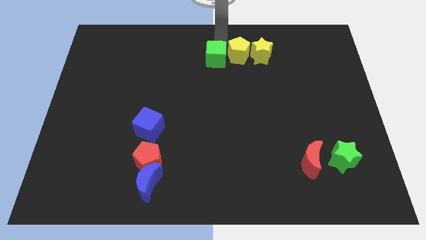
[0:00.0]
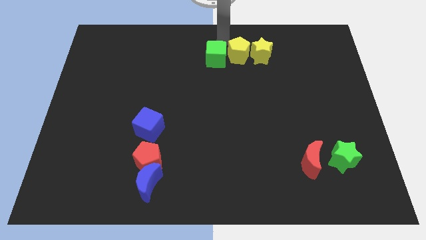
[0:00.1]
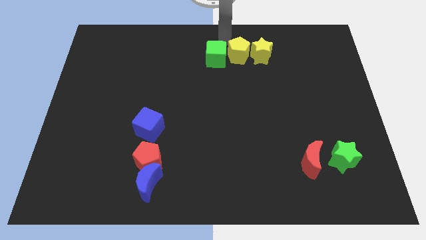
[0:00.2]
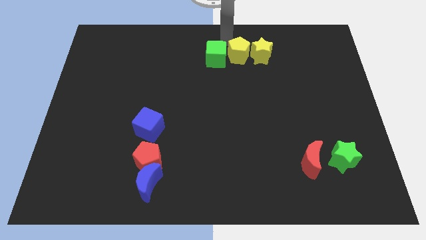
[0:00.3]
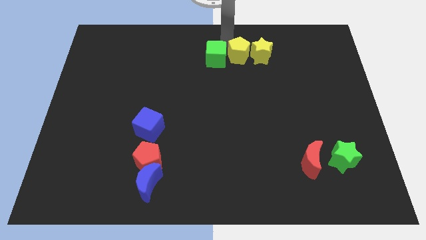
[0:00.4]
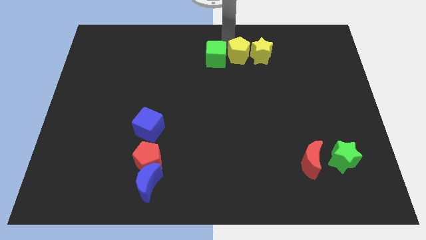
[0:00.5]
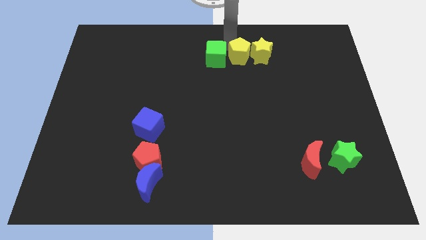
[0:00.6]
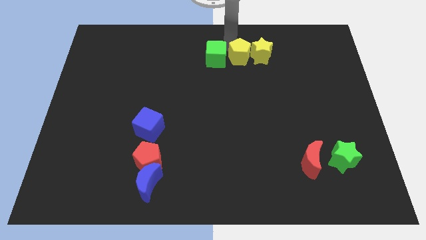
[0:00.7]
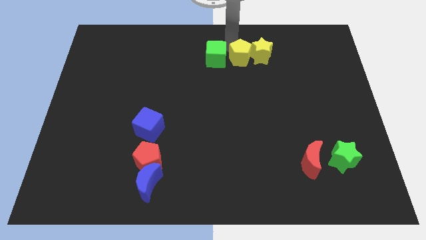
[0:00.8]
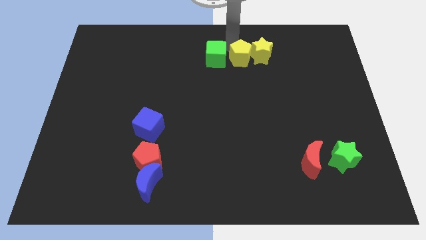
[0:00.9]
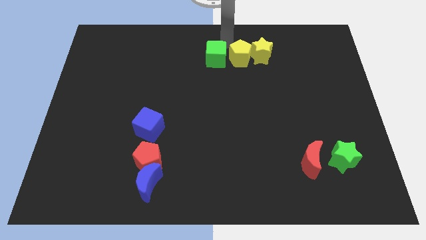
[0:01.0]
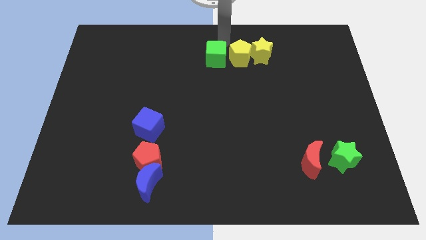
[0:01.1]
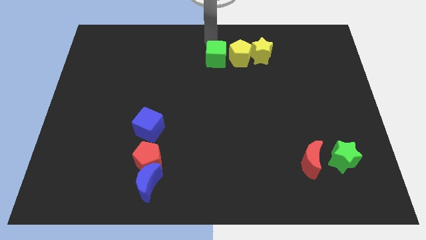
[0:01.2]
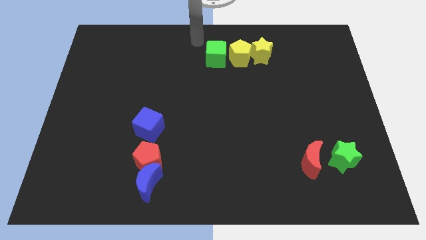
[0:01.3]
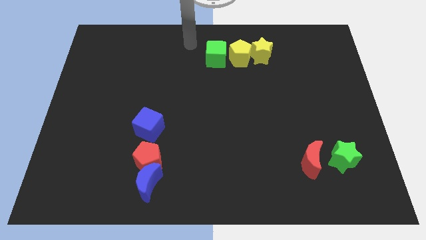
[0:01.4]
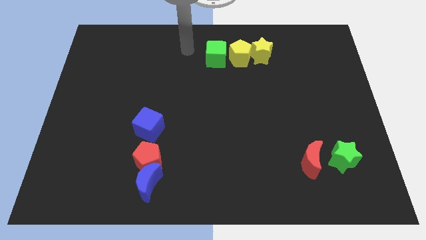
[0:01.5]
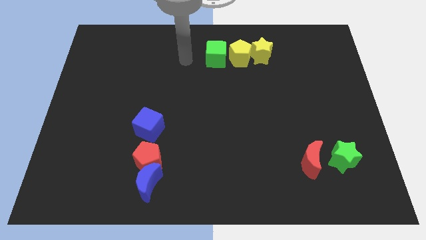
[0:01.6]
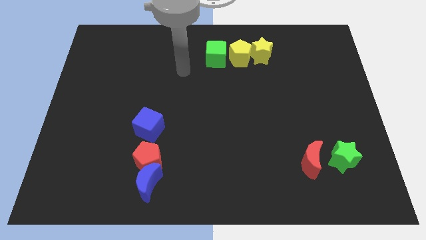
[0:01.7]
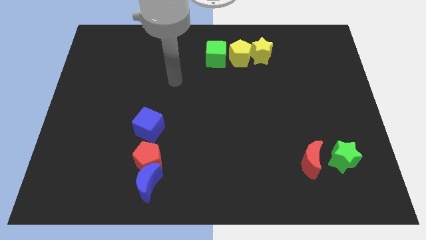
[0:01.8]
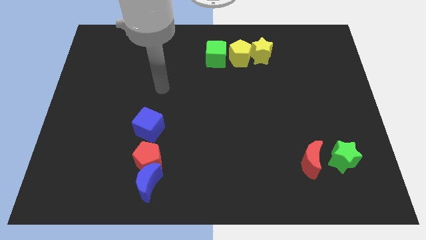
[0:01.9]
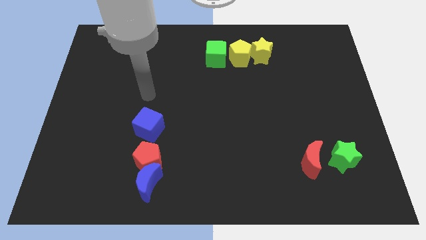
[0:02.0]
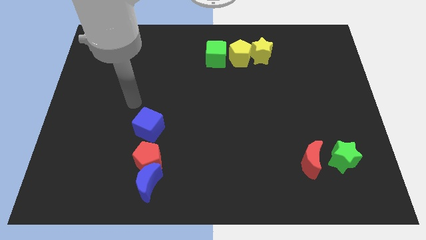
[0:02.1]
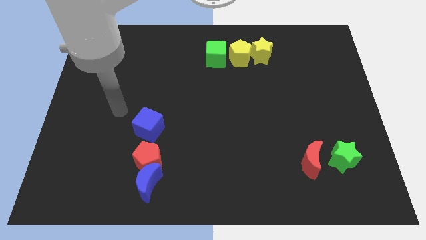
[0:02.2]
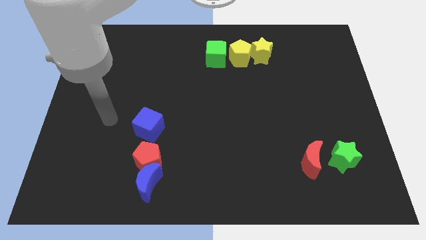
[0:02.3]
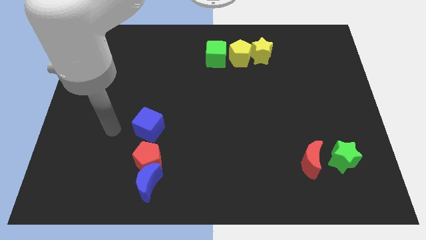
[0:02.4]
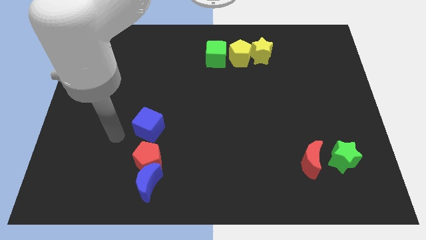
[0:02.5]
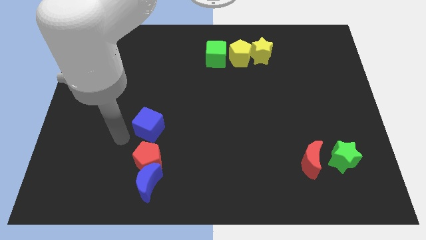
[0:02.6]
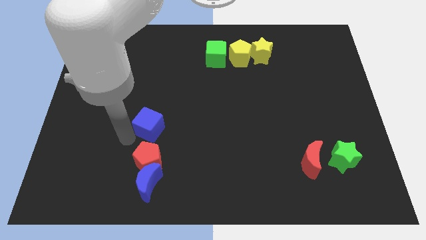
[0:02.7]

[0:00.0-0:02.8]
move arm to the blue cube

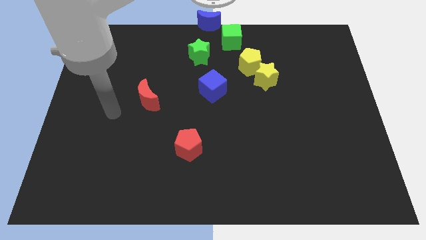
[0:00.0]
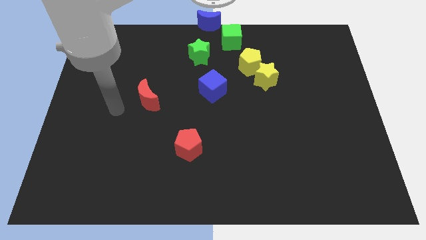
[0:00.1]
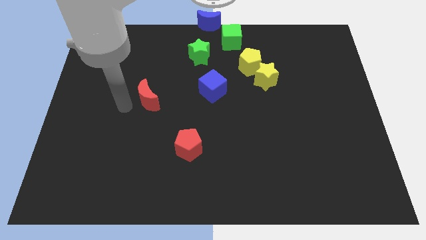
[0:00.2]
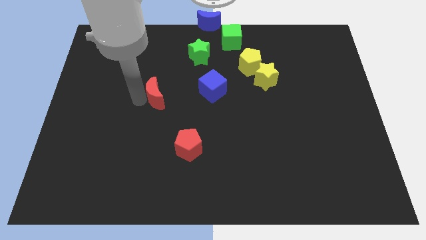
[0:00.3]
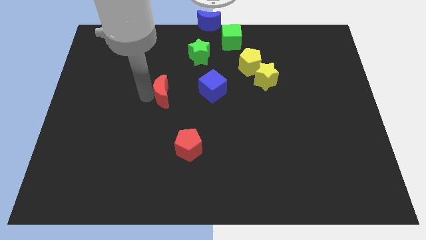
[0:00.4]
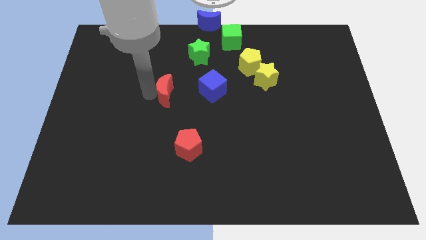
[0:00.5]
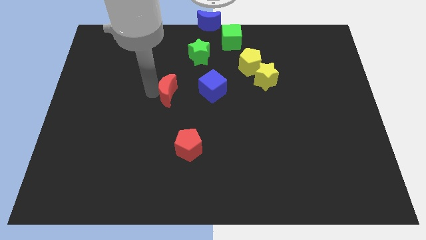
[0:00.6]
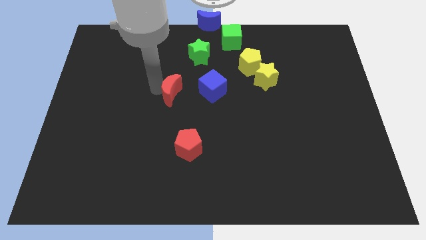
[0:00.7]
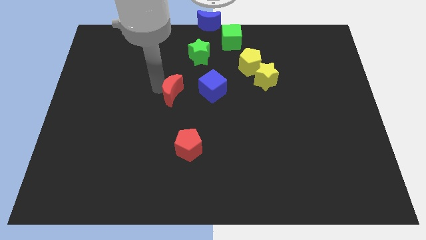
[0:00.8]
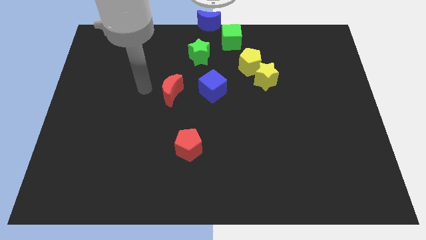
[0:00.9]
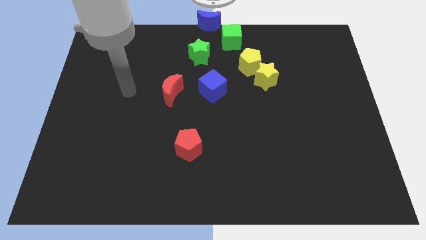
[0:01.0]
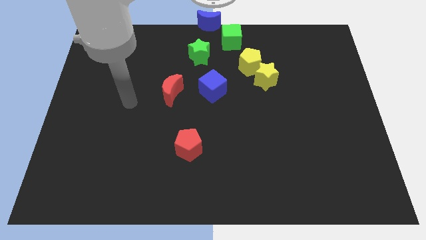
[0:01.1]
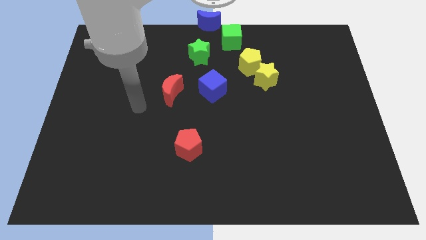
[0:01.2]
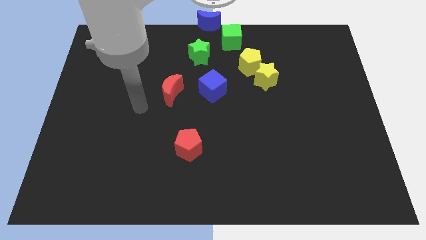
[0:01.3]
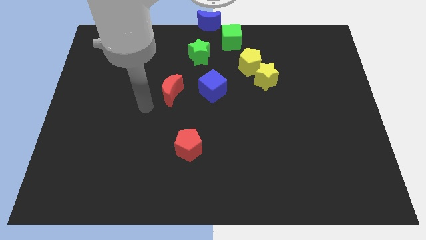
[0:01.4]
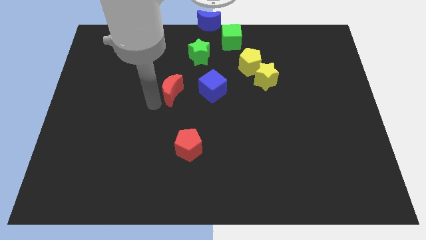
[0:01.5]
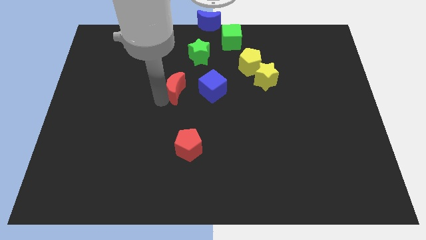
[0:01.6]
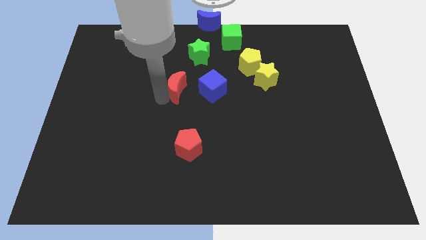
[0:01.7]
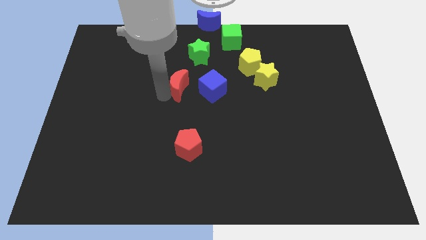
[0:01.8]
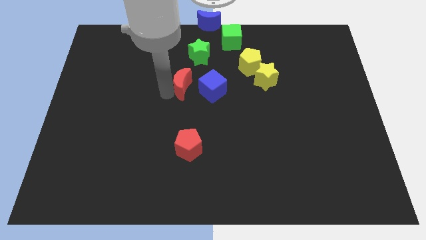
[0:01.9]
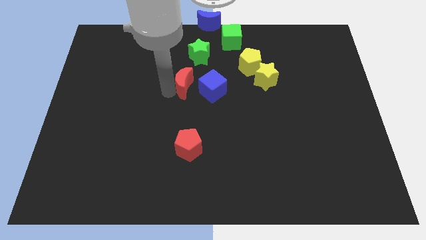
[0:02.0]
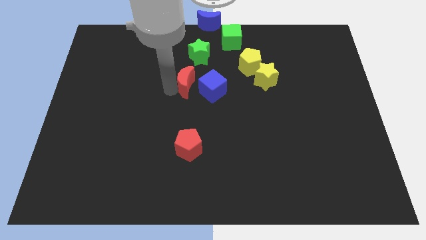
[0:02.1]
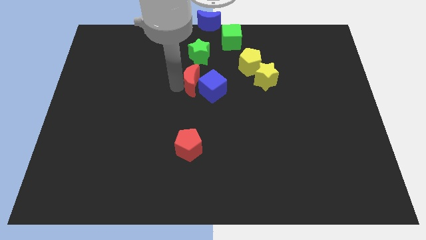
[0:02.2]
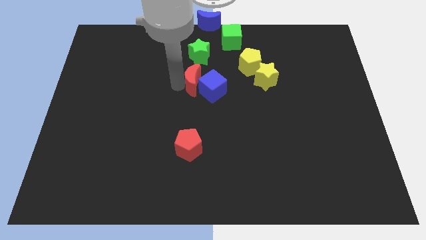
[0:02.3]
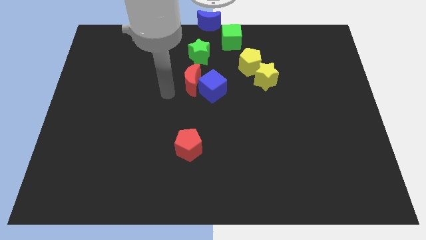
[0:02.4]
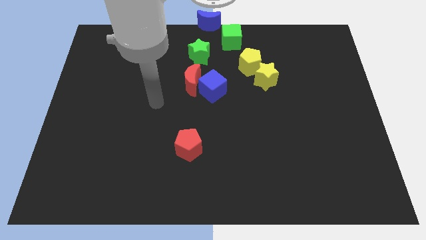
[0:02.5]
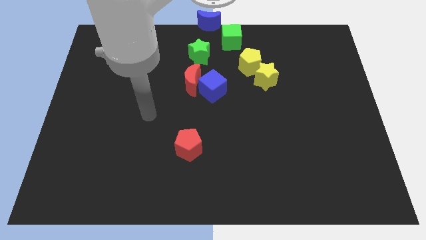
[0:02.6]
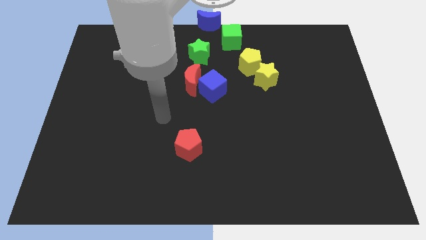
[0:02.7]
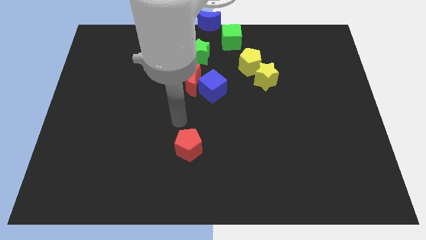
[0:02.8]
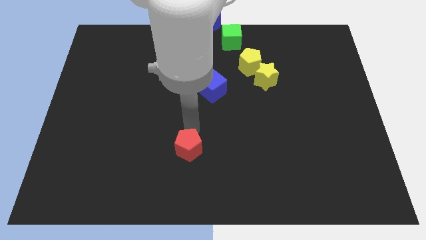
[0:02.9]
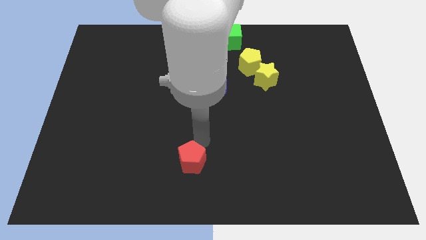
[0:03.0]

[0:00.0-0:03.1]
push the red moon closely to the blue cube from left

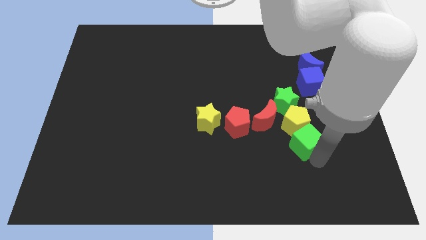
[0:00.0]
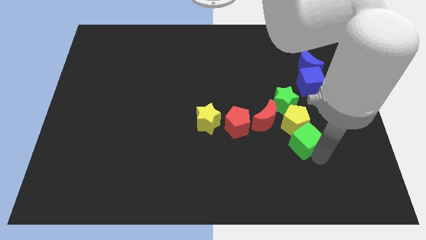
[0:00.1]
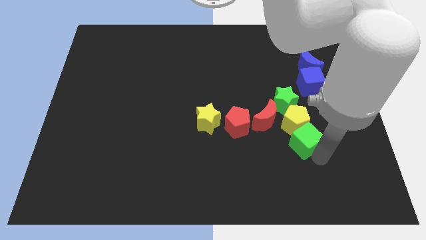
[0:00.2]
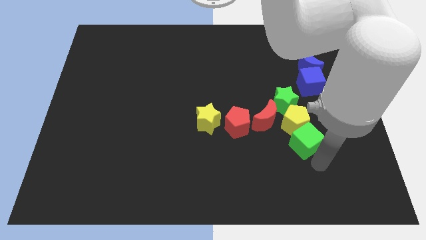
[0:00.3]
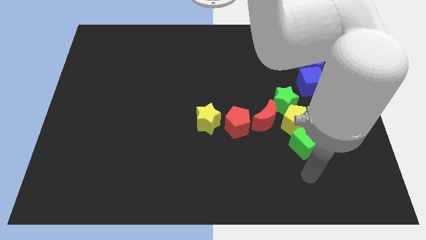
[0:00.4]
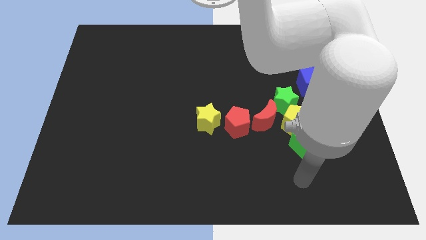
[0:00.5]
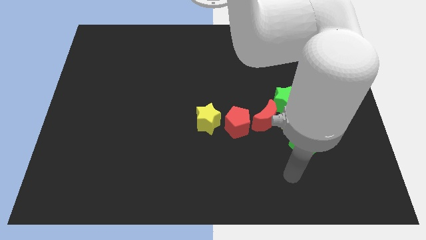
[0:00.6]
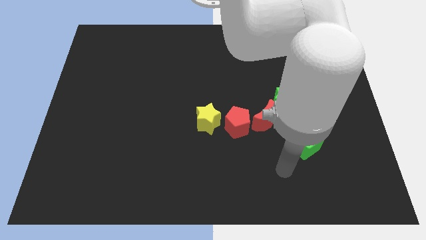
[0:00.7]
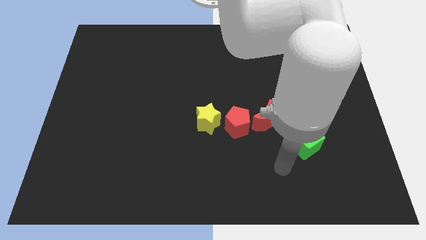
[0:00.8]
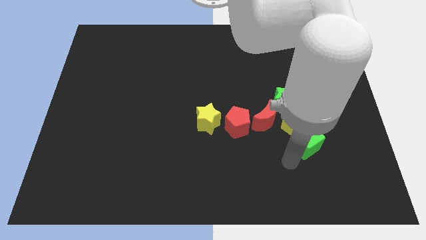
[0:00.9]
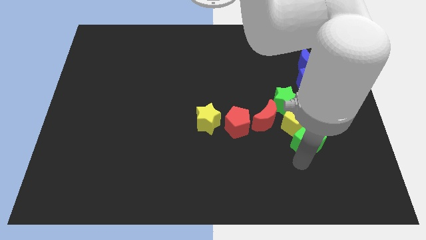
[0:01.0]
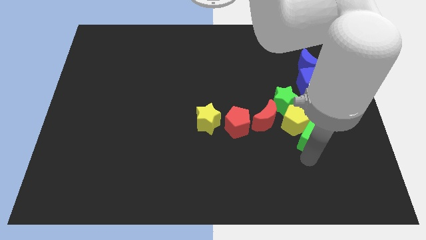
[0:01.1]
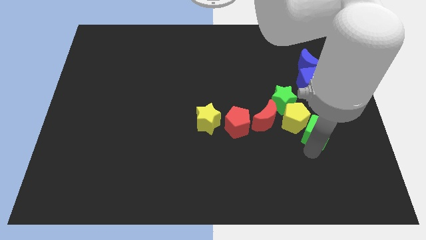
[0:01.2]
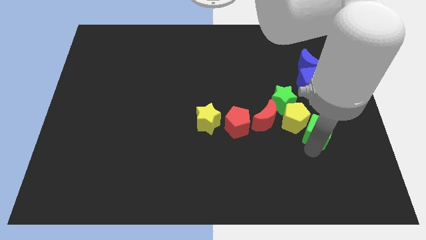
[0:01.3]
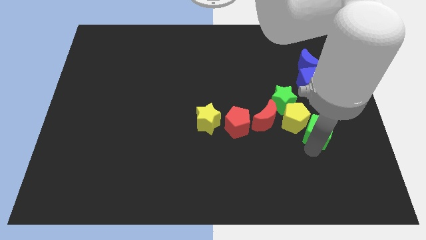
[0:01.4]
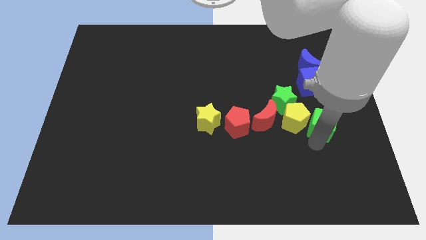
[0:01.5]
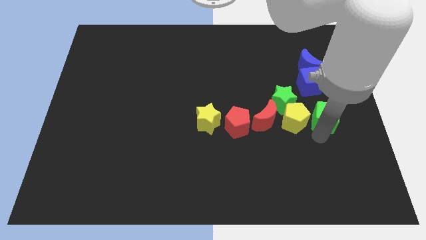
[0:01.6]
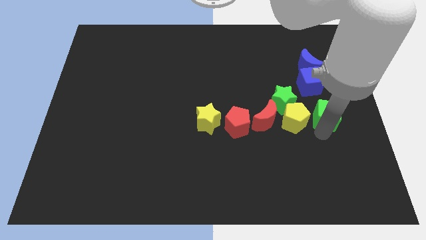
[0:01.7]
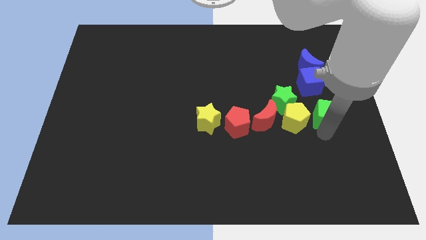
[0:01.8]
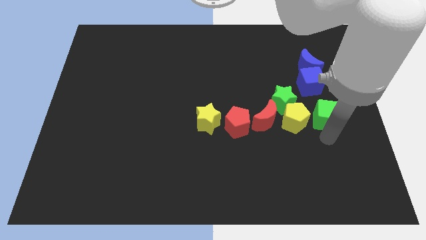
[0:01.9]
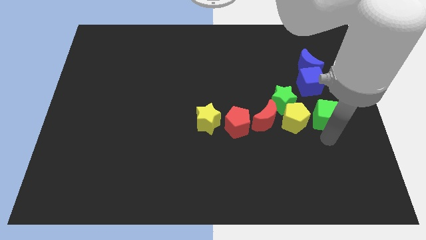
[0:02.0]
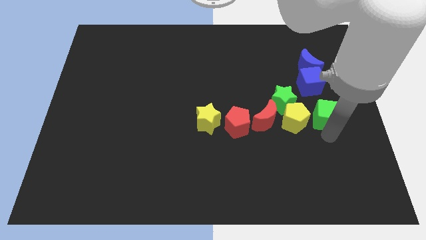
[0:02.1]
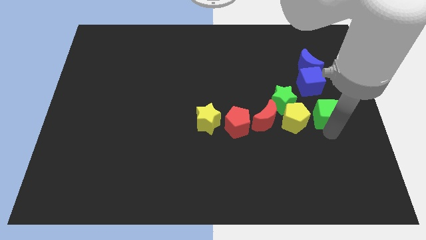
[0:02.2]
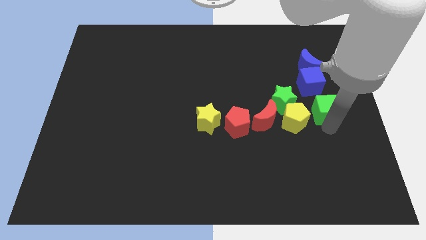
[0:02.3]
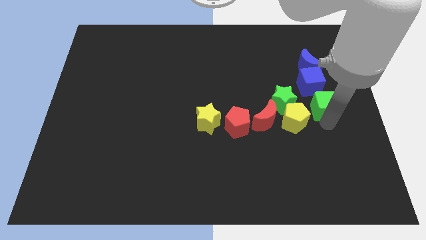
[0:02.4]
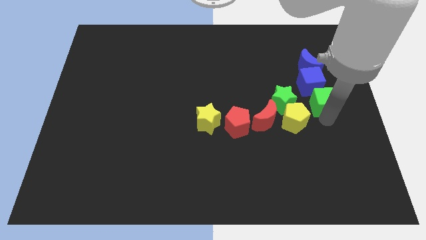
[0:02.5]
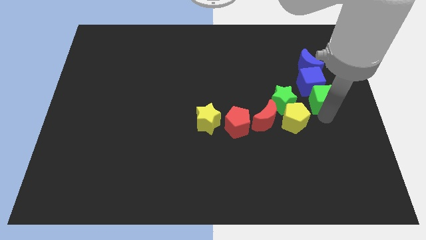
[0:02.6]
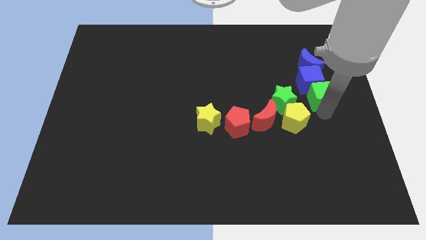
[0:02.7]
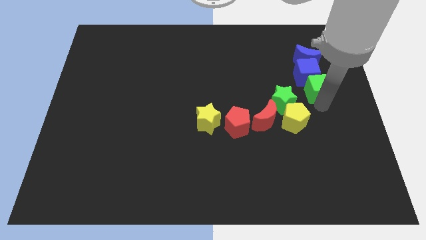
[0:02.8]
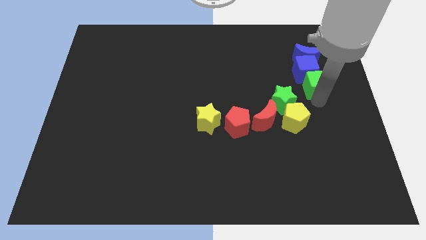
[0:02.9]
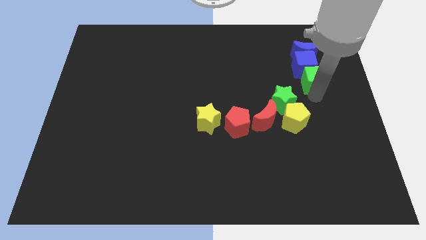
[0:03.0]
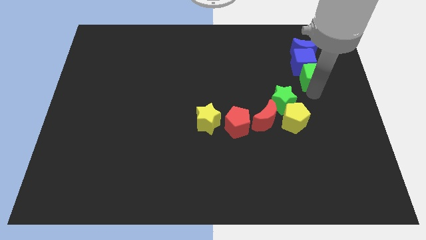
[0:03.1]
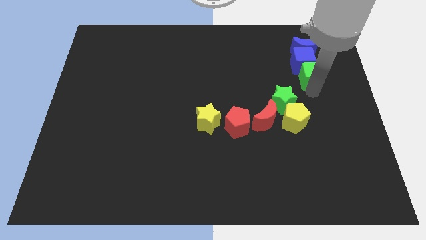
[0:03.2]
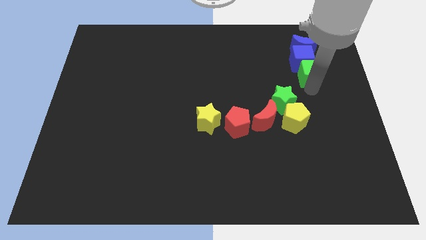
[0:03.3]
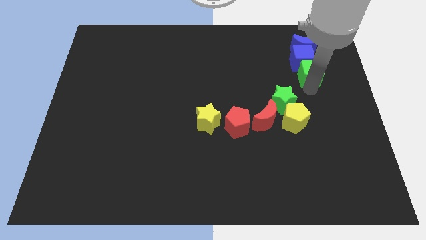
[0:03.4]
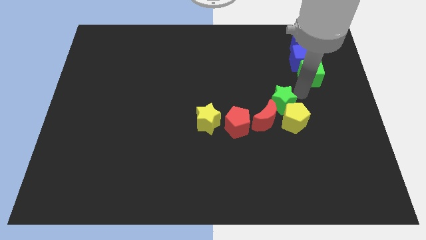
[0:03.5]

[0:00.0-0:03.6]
push green cube towards blue cube
